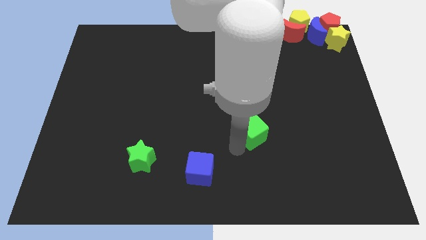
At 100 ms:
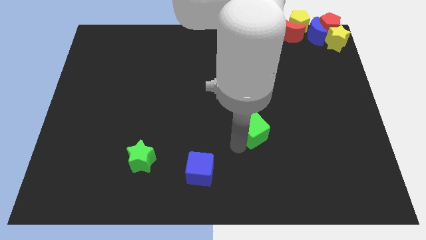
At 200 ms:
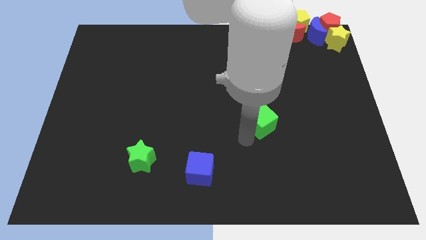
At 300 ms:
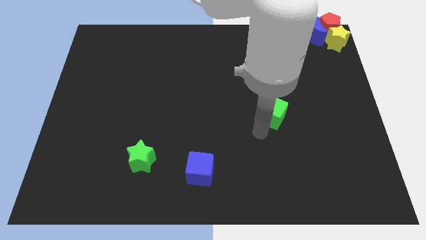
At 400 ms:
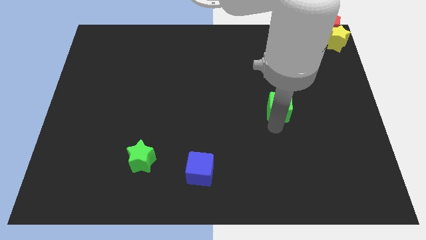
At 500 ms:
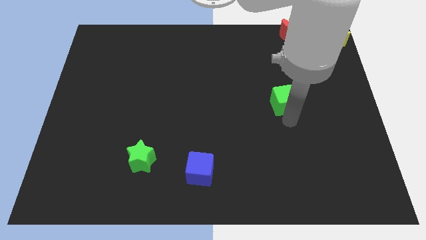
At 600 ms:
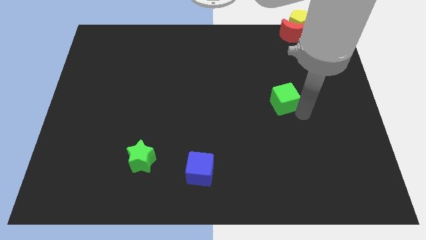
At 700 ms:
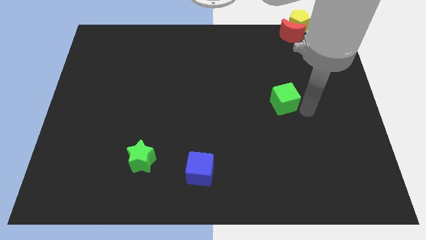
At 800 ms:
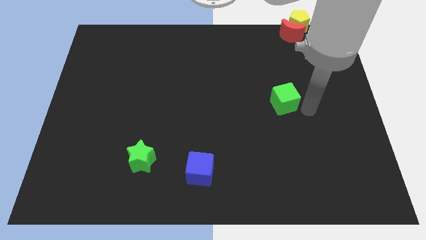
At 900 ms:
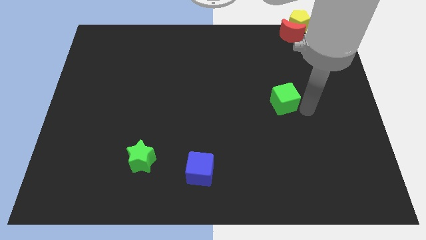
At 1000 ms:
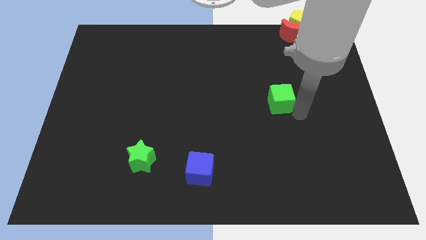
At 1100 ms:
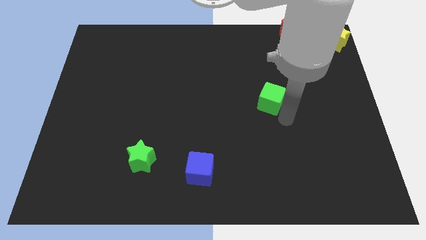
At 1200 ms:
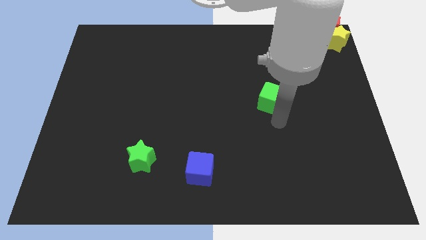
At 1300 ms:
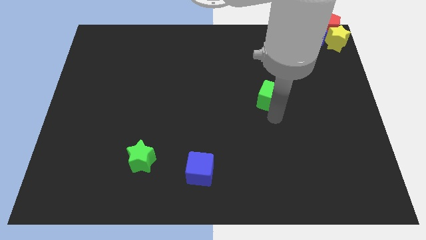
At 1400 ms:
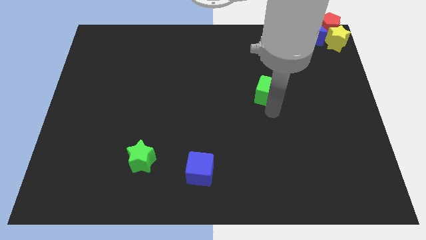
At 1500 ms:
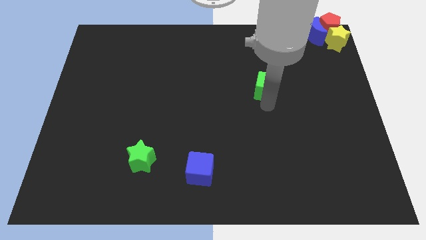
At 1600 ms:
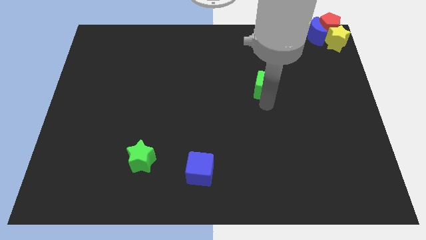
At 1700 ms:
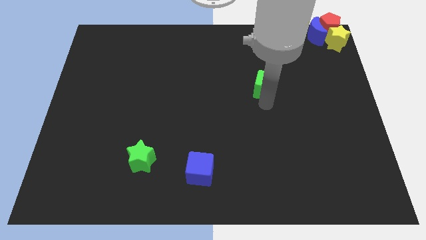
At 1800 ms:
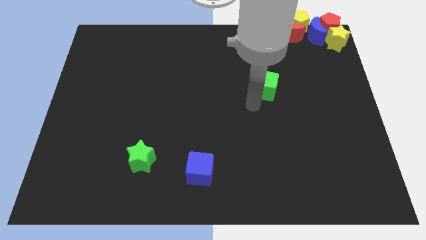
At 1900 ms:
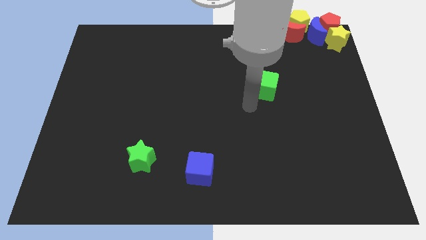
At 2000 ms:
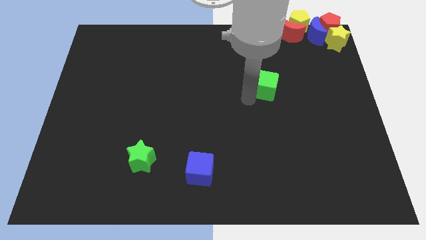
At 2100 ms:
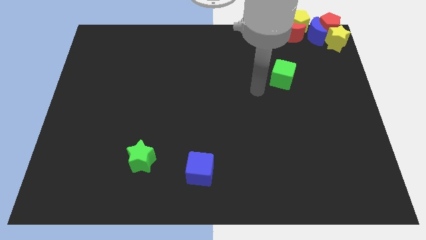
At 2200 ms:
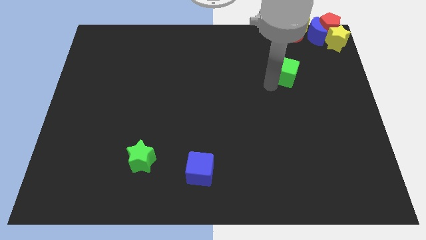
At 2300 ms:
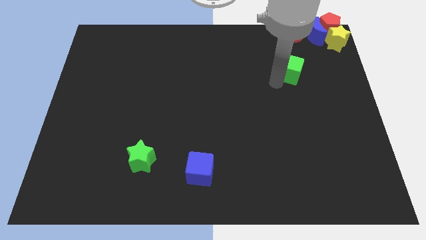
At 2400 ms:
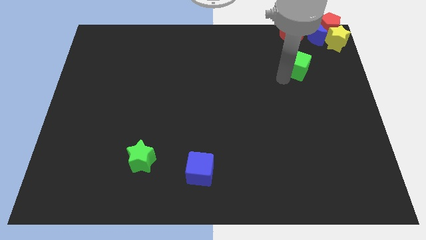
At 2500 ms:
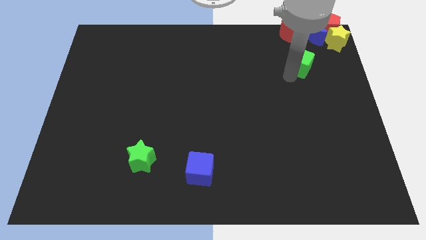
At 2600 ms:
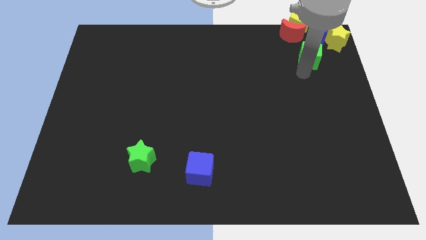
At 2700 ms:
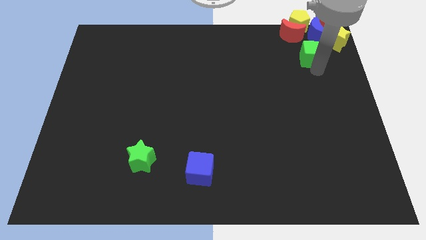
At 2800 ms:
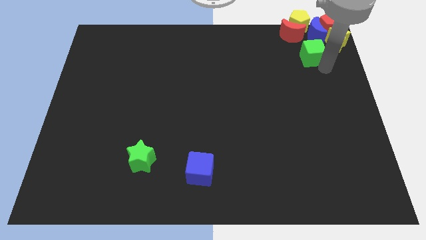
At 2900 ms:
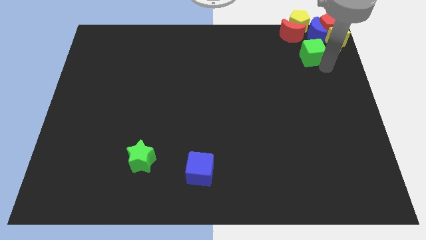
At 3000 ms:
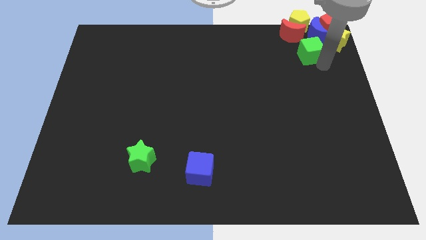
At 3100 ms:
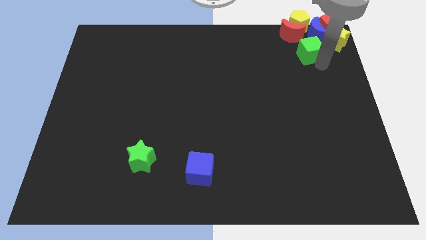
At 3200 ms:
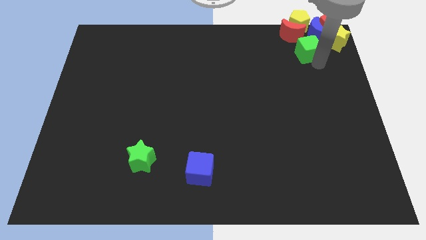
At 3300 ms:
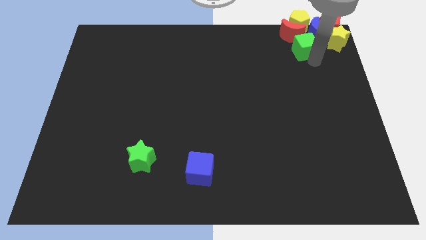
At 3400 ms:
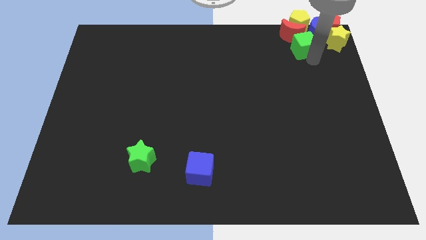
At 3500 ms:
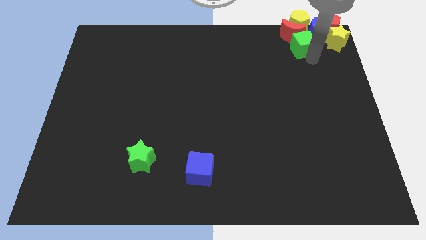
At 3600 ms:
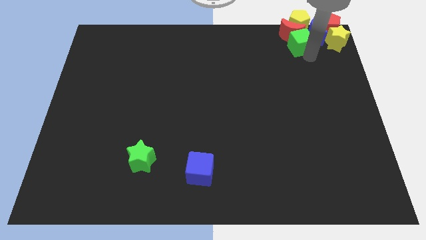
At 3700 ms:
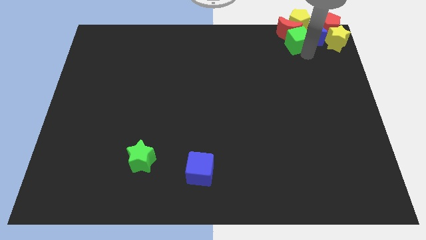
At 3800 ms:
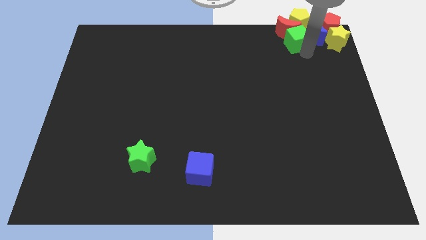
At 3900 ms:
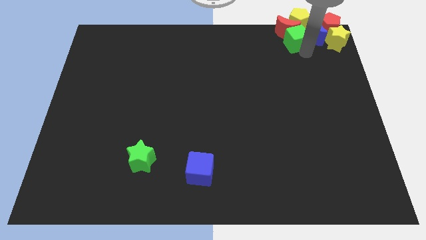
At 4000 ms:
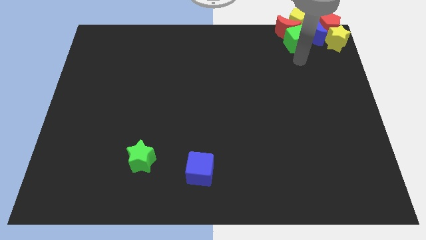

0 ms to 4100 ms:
place green cube close to red moon

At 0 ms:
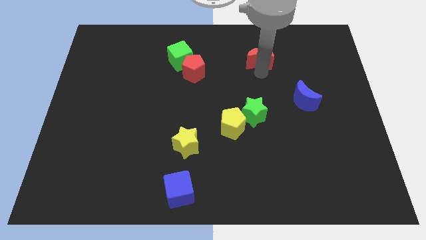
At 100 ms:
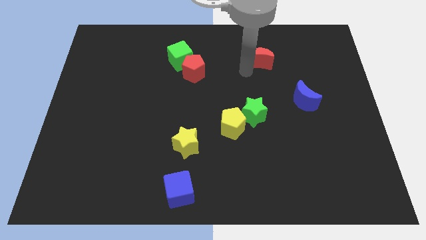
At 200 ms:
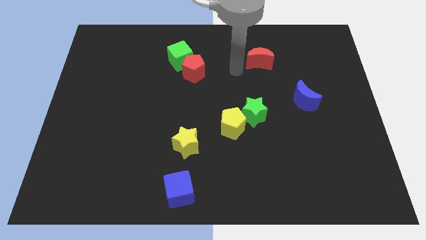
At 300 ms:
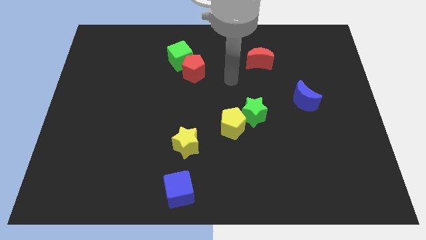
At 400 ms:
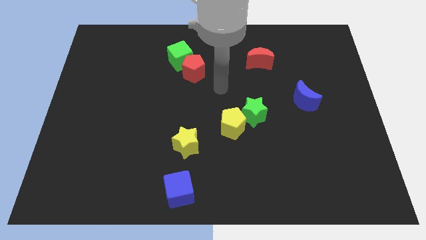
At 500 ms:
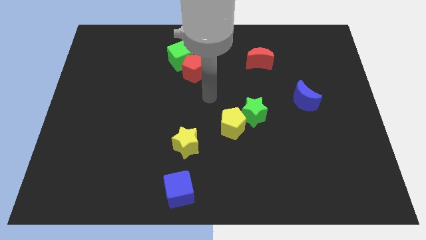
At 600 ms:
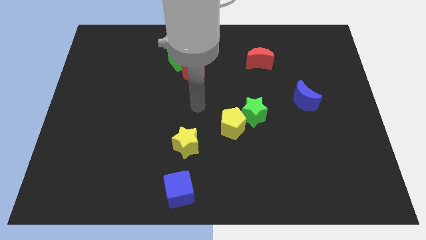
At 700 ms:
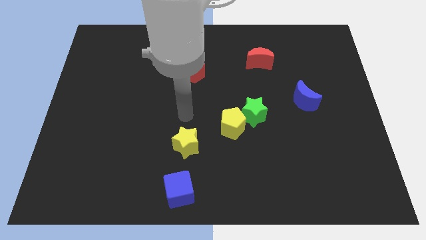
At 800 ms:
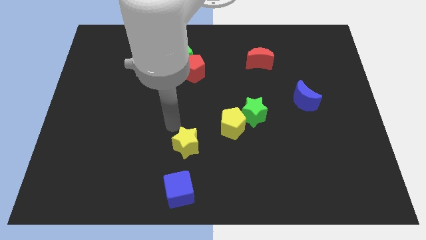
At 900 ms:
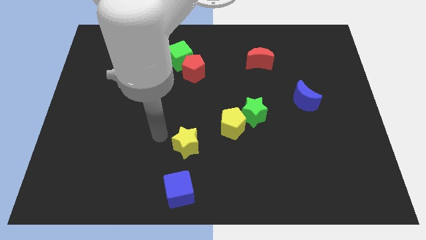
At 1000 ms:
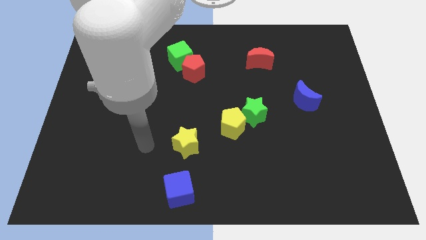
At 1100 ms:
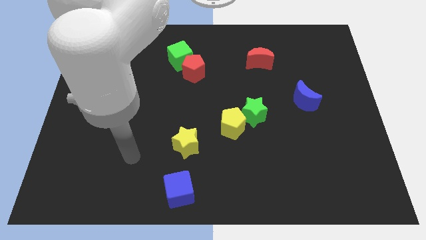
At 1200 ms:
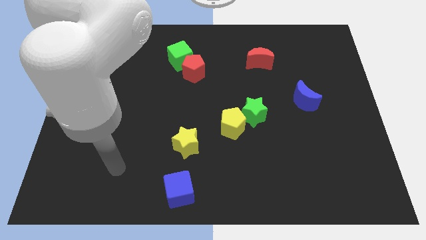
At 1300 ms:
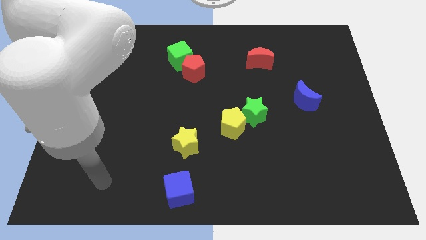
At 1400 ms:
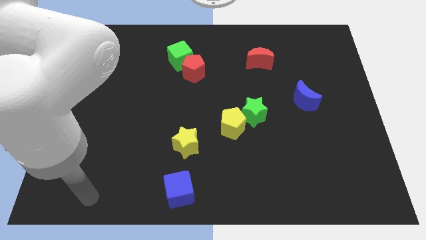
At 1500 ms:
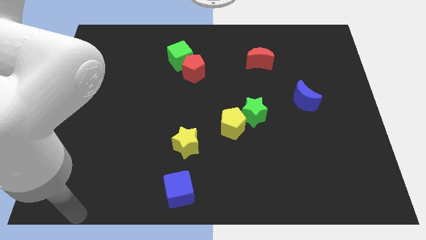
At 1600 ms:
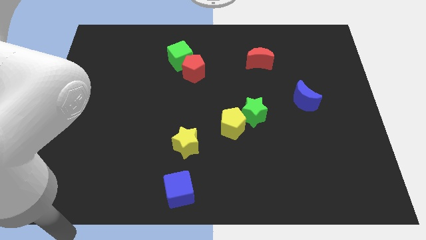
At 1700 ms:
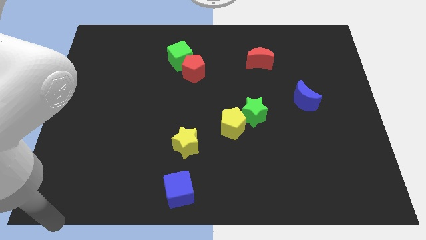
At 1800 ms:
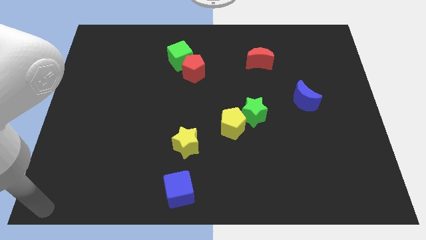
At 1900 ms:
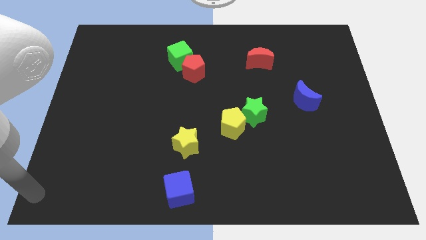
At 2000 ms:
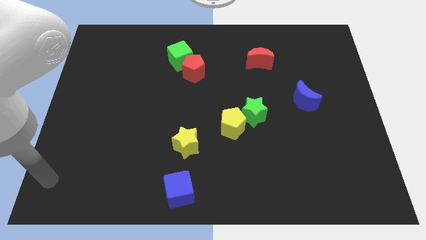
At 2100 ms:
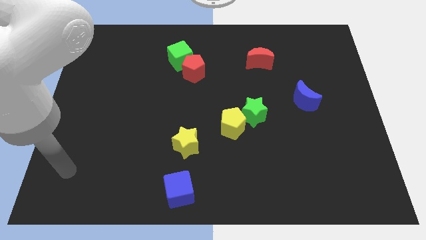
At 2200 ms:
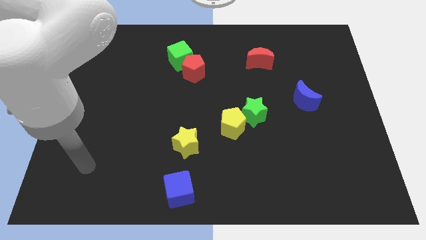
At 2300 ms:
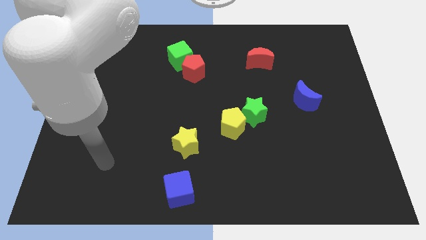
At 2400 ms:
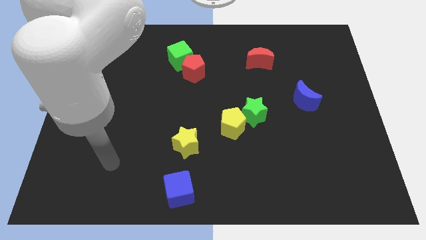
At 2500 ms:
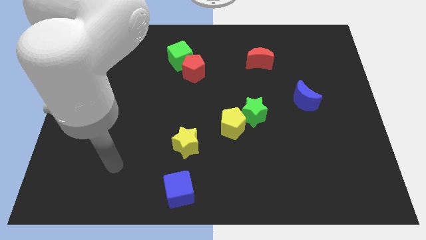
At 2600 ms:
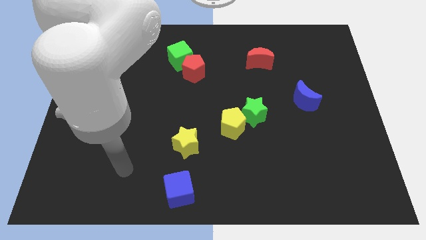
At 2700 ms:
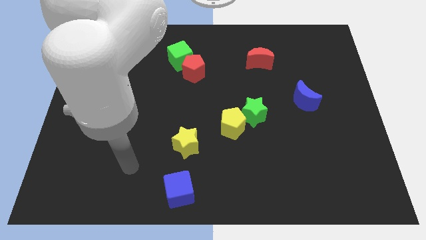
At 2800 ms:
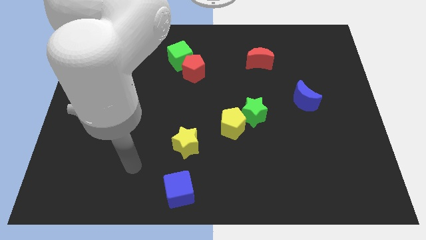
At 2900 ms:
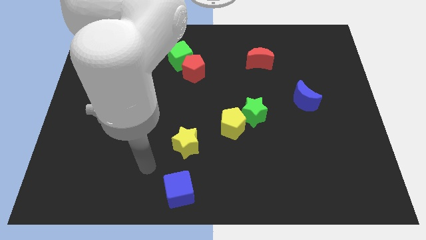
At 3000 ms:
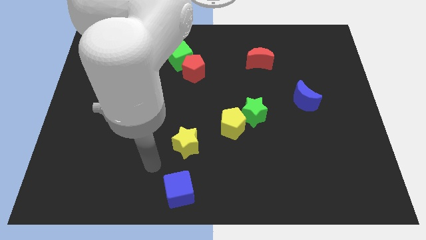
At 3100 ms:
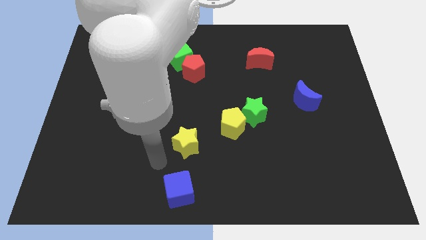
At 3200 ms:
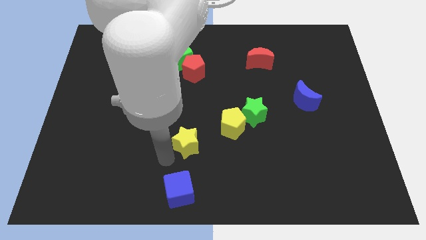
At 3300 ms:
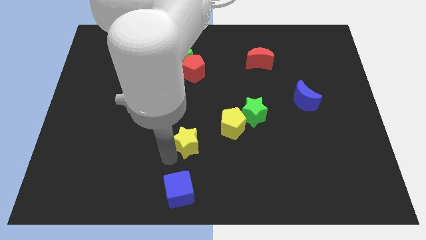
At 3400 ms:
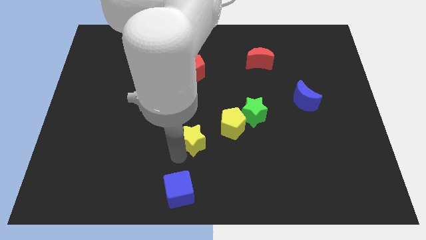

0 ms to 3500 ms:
move your arm close to the yellow star

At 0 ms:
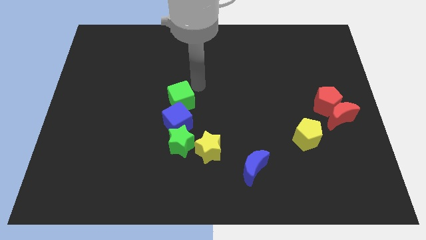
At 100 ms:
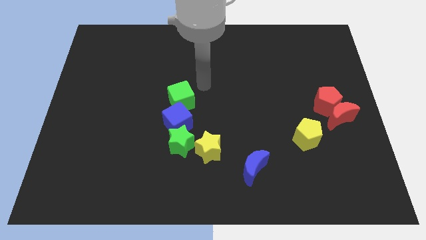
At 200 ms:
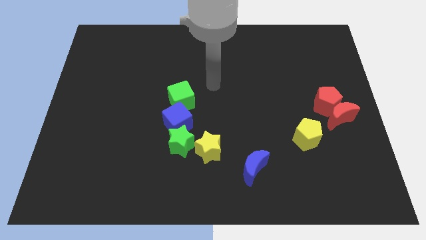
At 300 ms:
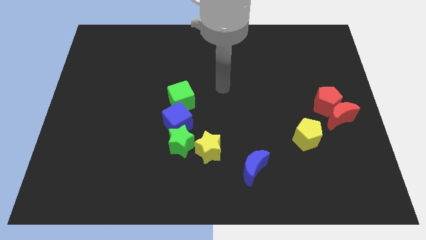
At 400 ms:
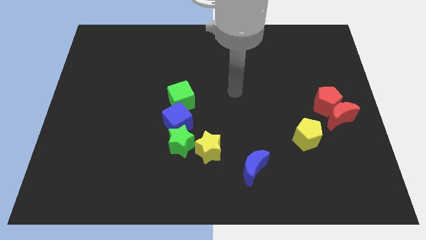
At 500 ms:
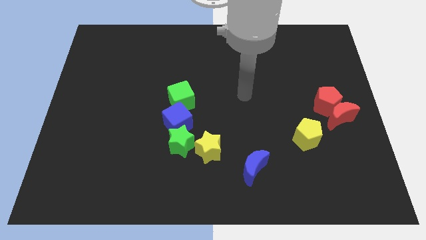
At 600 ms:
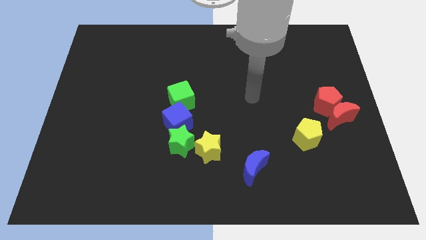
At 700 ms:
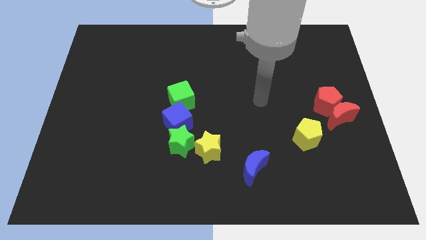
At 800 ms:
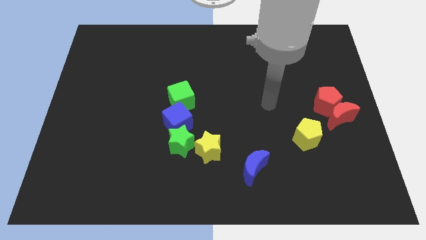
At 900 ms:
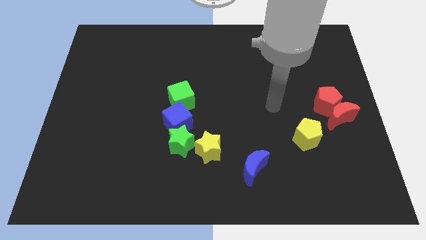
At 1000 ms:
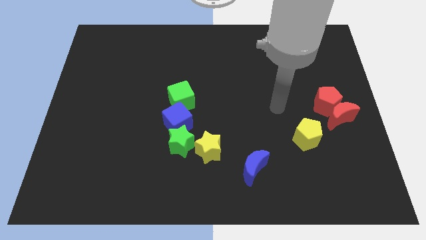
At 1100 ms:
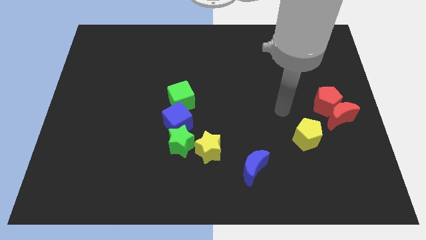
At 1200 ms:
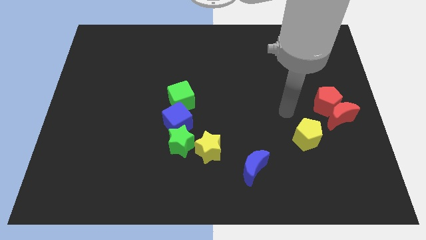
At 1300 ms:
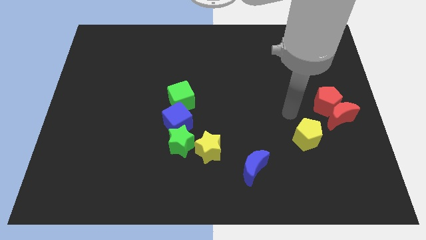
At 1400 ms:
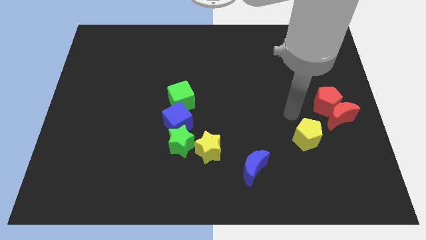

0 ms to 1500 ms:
move your arm away from green cube
